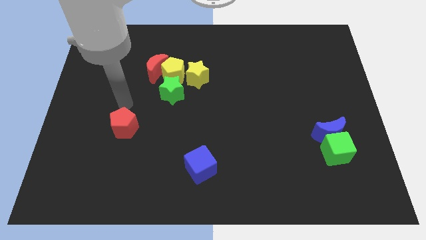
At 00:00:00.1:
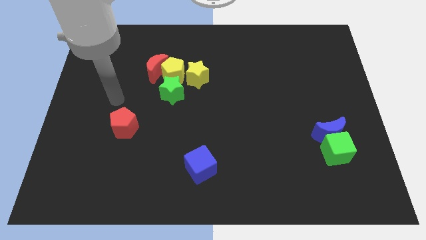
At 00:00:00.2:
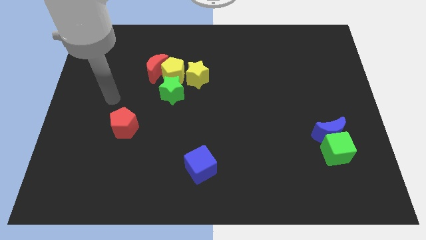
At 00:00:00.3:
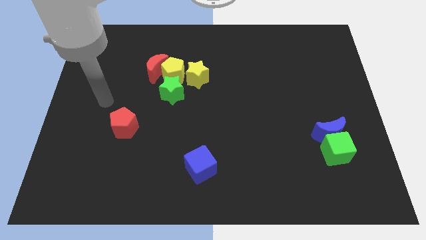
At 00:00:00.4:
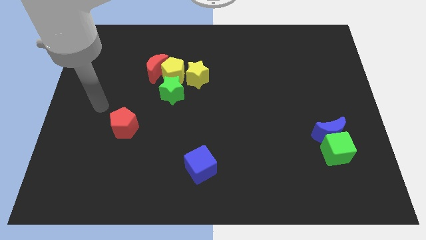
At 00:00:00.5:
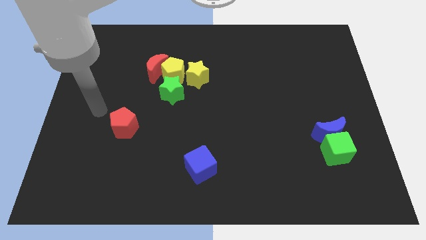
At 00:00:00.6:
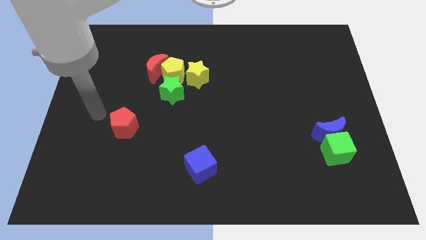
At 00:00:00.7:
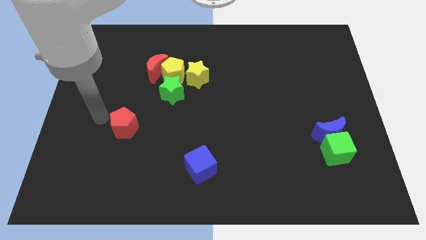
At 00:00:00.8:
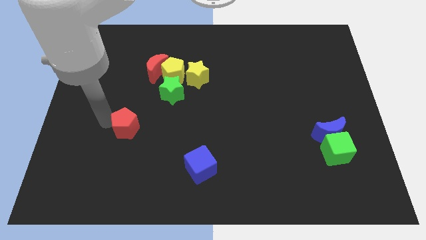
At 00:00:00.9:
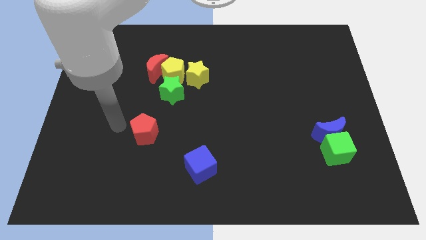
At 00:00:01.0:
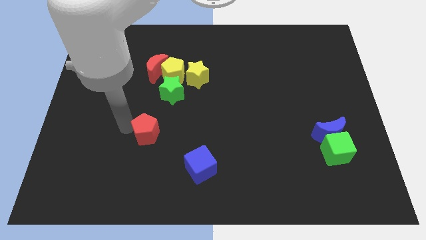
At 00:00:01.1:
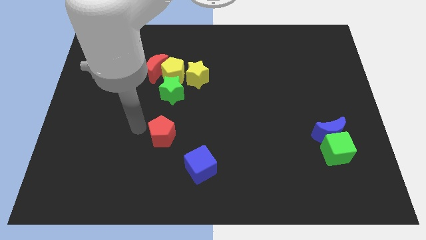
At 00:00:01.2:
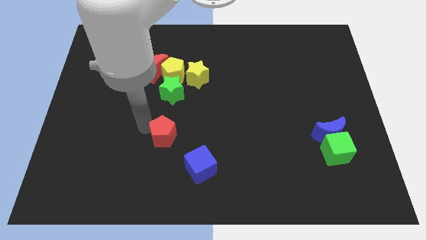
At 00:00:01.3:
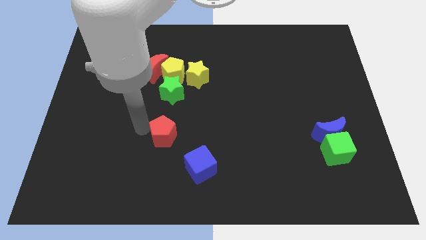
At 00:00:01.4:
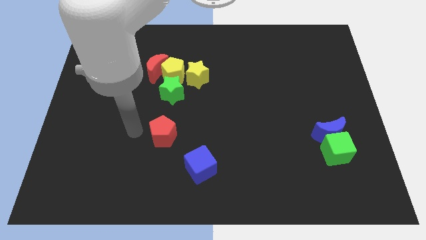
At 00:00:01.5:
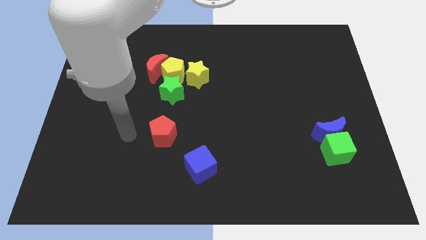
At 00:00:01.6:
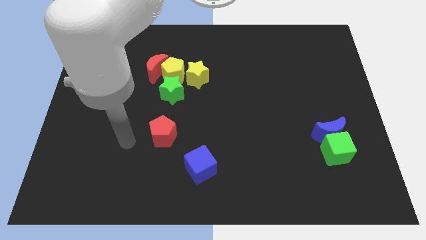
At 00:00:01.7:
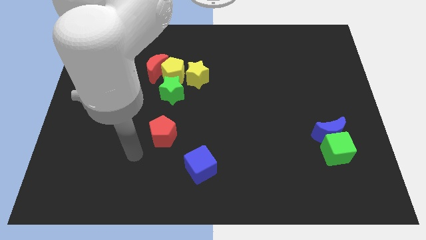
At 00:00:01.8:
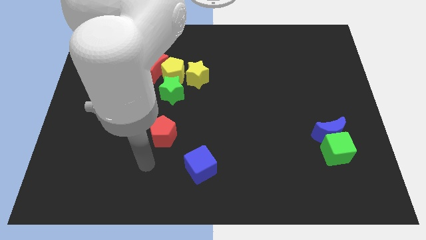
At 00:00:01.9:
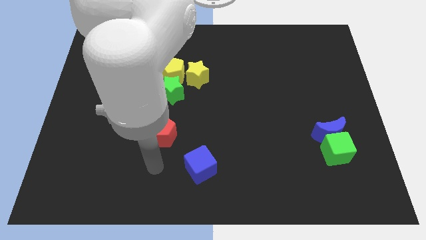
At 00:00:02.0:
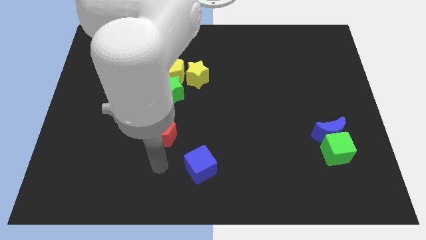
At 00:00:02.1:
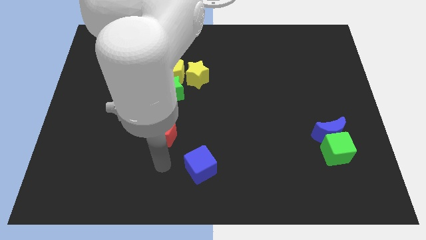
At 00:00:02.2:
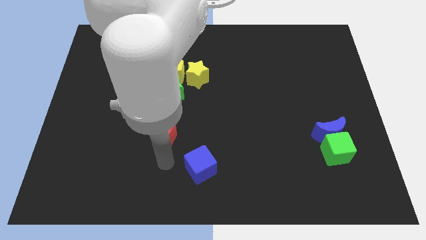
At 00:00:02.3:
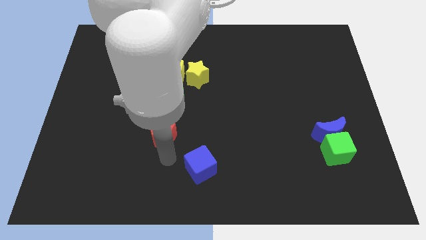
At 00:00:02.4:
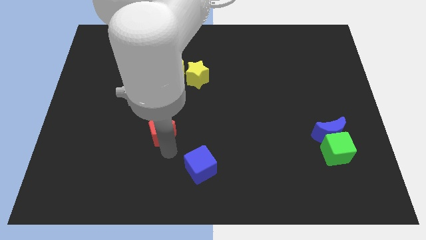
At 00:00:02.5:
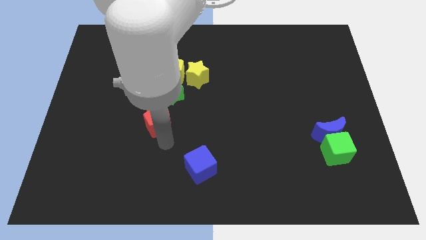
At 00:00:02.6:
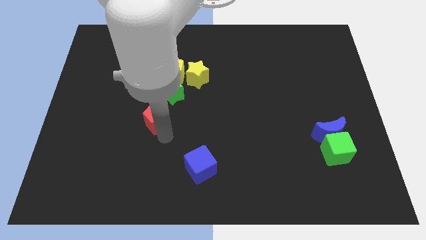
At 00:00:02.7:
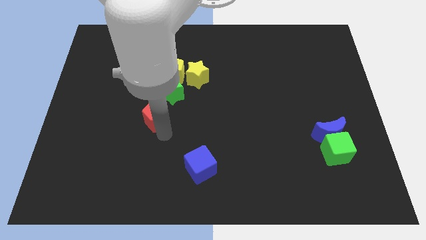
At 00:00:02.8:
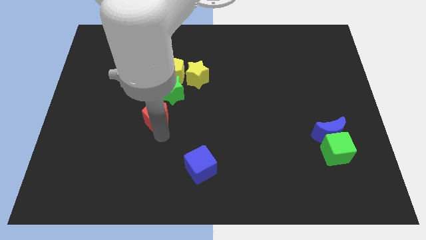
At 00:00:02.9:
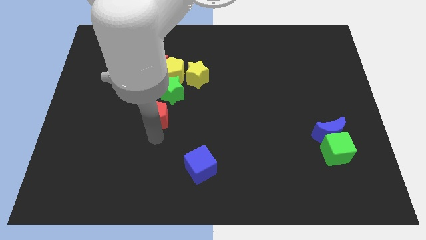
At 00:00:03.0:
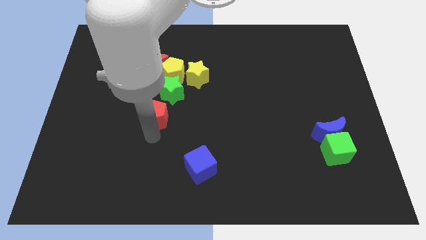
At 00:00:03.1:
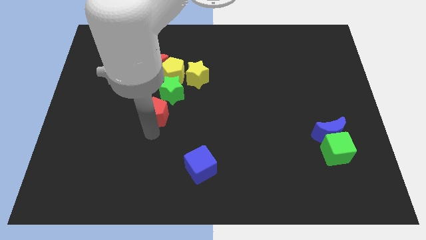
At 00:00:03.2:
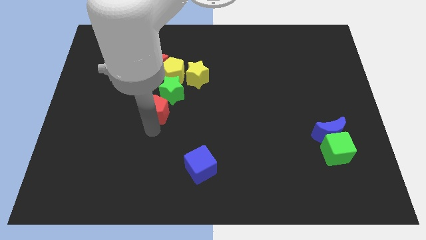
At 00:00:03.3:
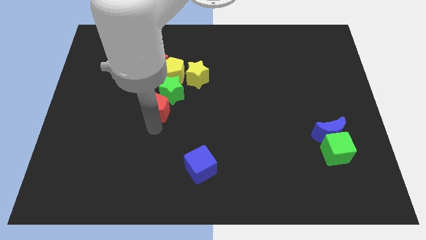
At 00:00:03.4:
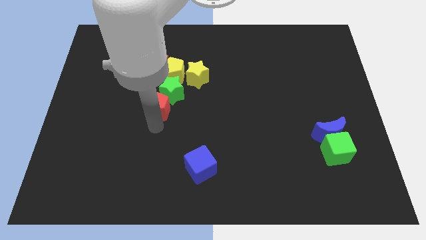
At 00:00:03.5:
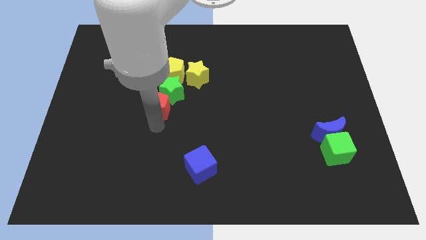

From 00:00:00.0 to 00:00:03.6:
push the red pentagon to the bottom left to the green star

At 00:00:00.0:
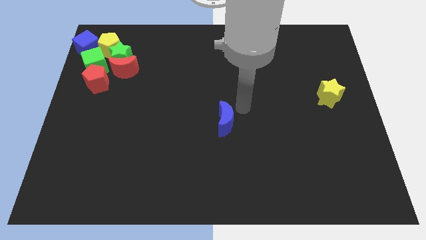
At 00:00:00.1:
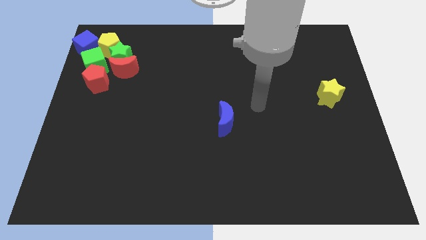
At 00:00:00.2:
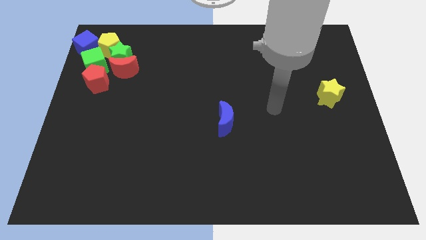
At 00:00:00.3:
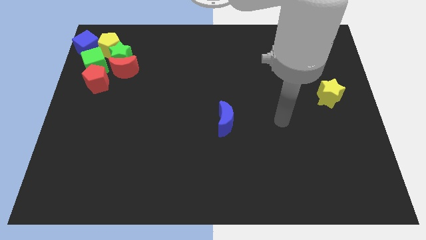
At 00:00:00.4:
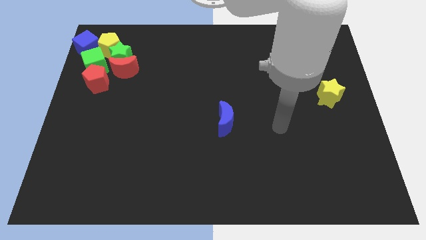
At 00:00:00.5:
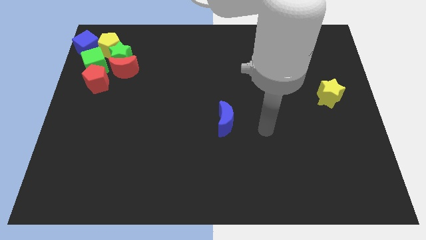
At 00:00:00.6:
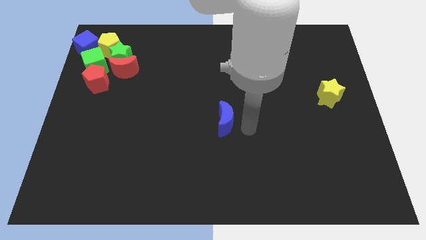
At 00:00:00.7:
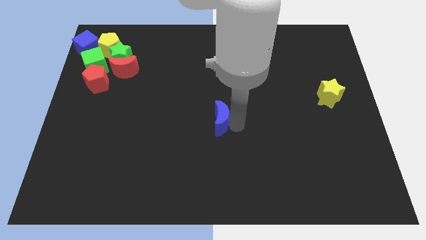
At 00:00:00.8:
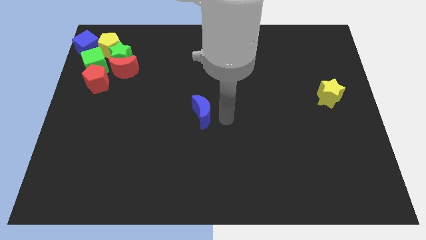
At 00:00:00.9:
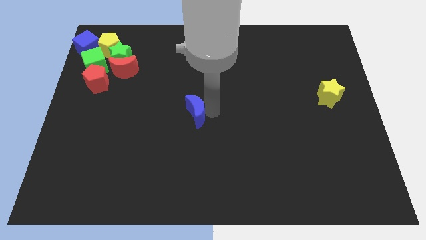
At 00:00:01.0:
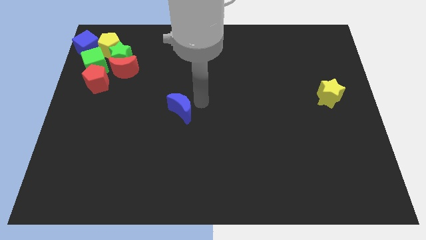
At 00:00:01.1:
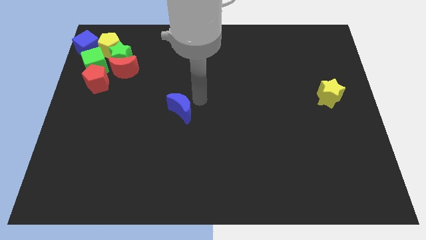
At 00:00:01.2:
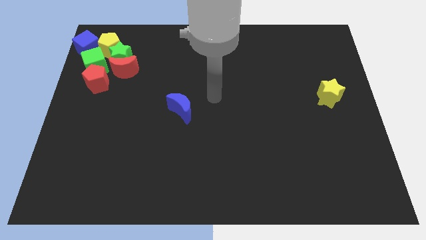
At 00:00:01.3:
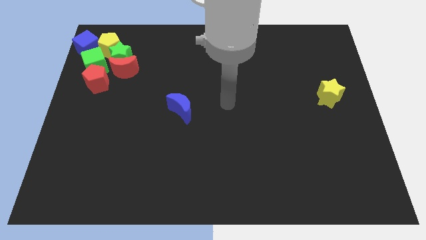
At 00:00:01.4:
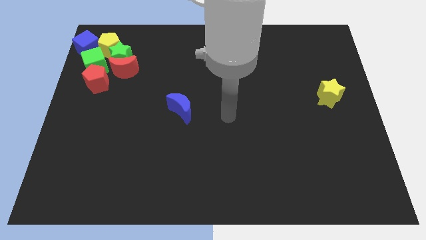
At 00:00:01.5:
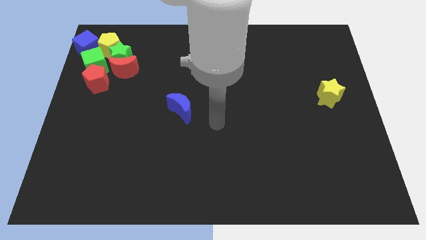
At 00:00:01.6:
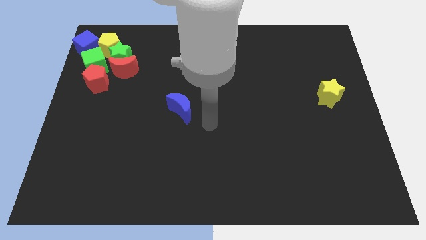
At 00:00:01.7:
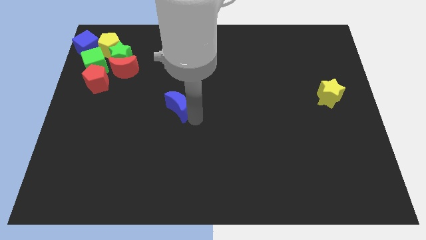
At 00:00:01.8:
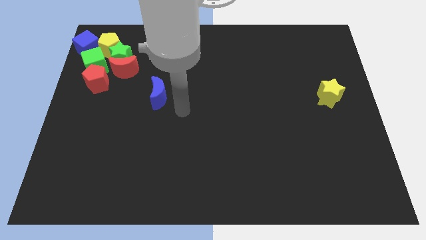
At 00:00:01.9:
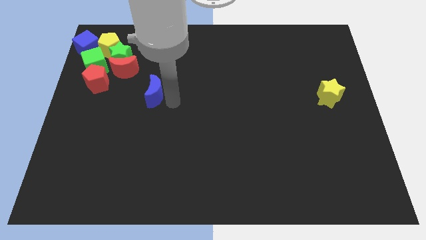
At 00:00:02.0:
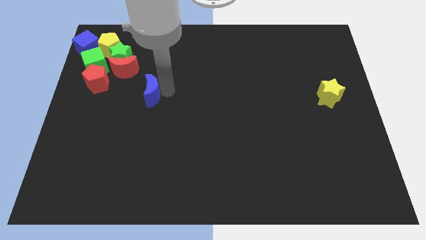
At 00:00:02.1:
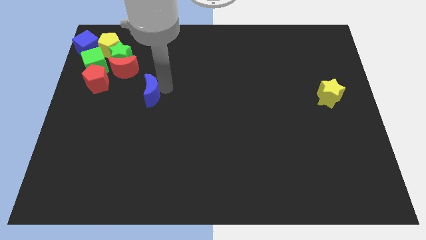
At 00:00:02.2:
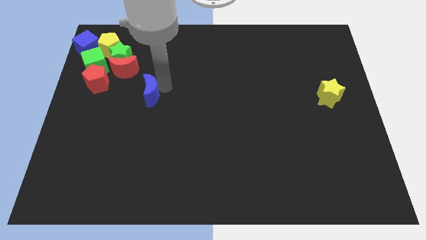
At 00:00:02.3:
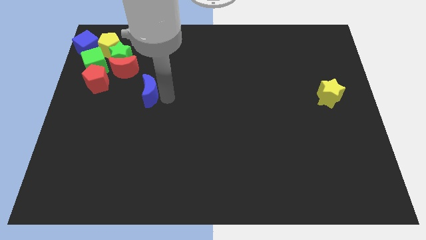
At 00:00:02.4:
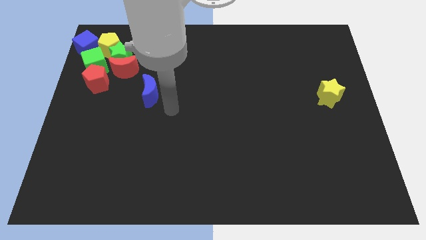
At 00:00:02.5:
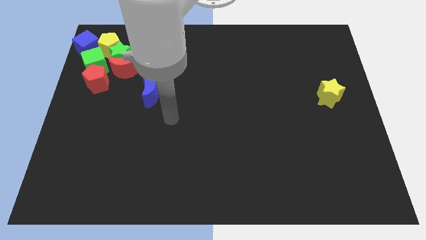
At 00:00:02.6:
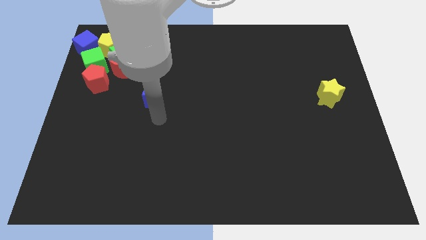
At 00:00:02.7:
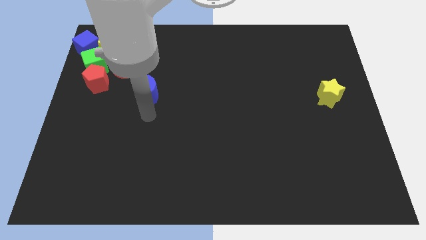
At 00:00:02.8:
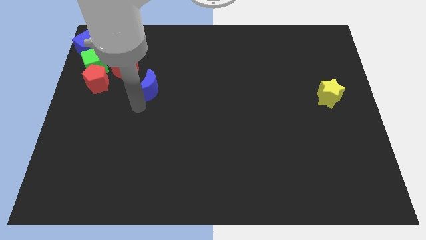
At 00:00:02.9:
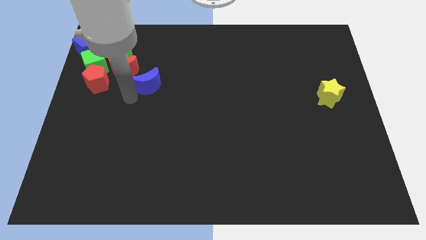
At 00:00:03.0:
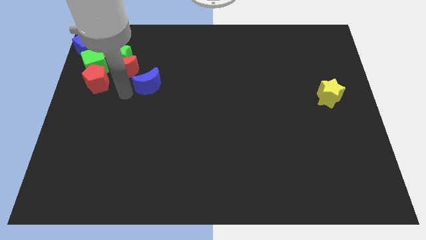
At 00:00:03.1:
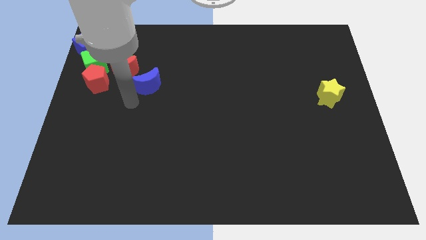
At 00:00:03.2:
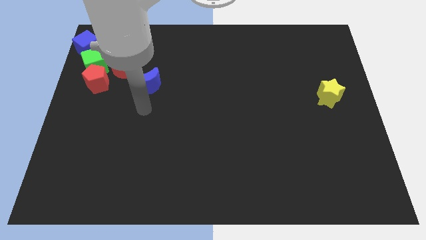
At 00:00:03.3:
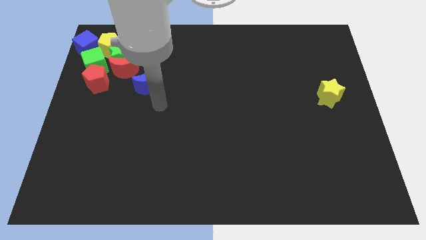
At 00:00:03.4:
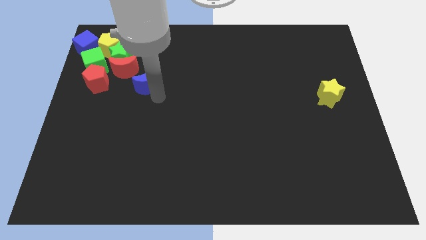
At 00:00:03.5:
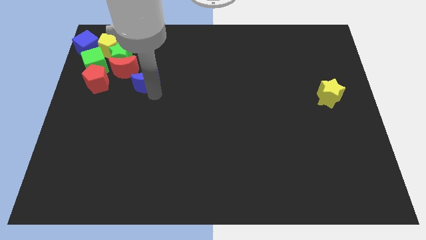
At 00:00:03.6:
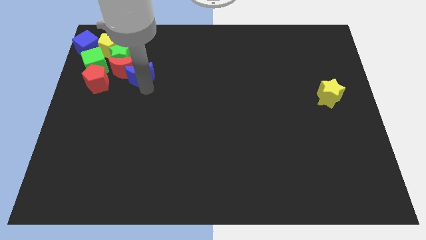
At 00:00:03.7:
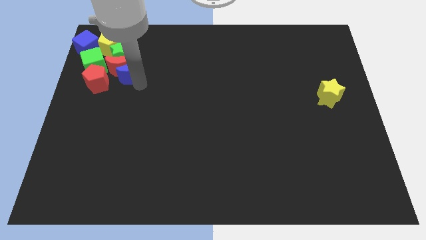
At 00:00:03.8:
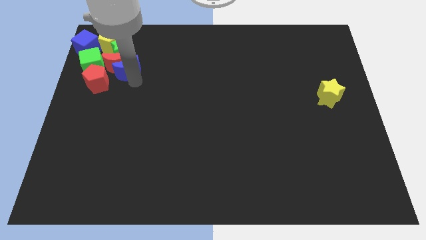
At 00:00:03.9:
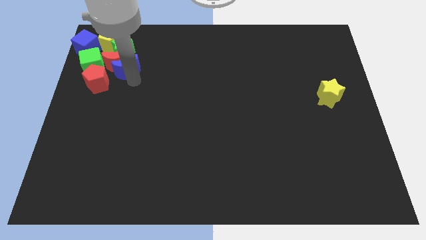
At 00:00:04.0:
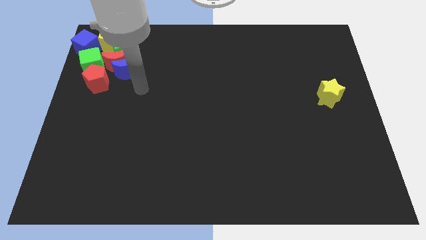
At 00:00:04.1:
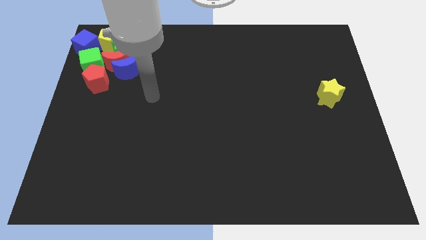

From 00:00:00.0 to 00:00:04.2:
move the blue crescent into the group of blocks

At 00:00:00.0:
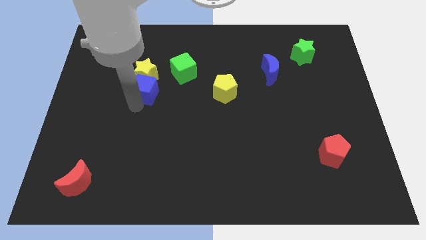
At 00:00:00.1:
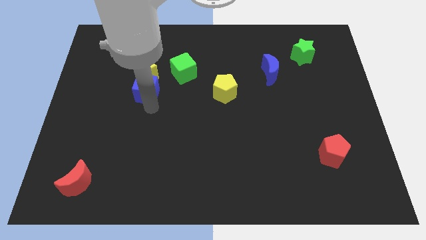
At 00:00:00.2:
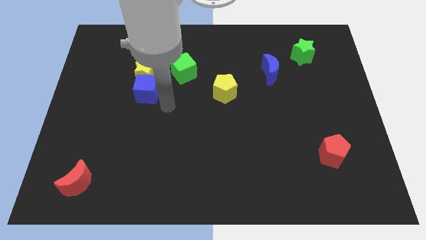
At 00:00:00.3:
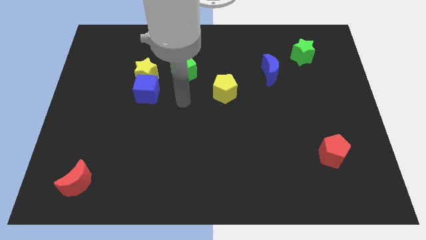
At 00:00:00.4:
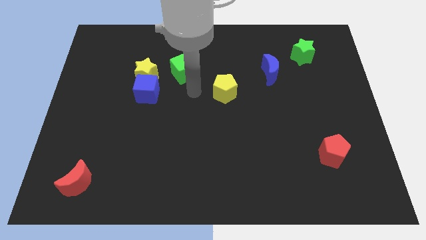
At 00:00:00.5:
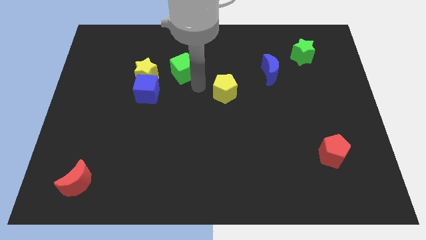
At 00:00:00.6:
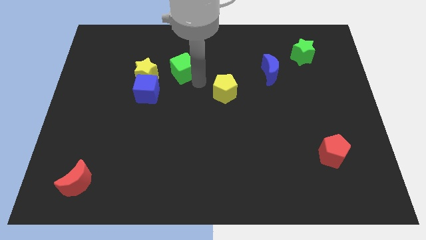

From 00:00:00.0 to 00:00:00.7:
place the arm down to the green cube

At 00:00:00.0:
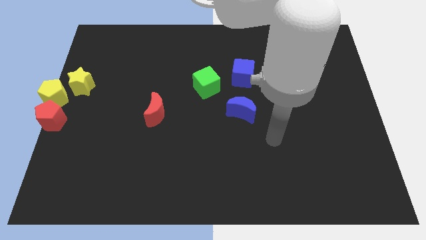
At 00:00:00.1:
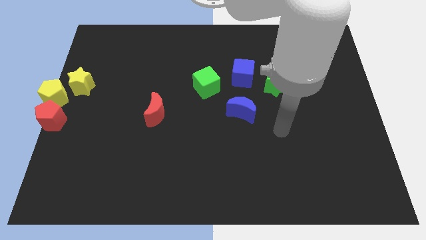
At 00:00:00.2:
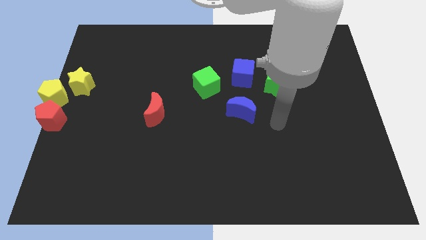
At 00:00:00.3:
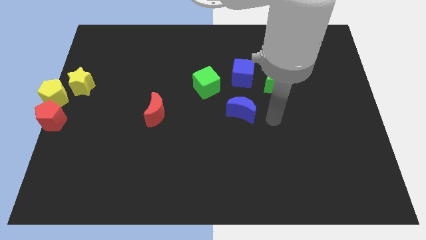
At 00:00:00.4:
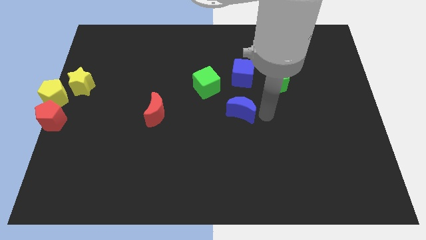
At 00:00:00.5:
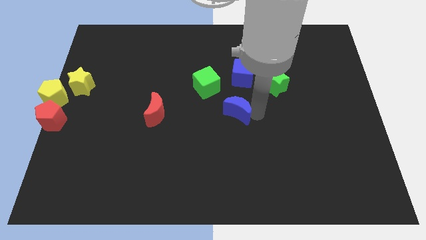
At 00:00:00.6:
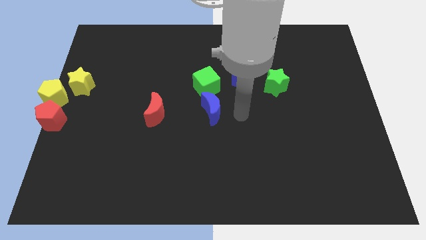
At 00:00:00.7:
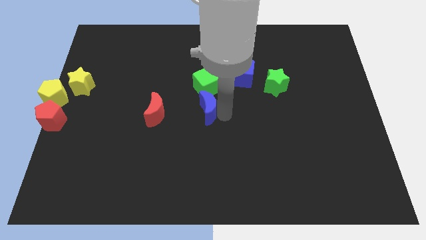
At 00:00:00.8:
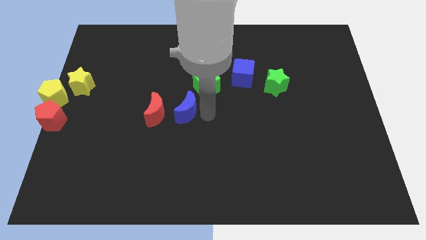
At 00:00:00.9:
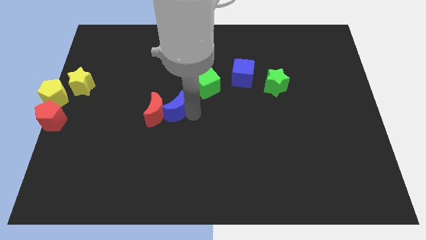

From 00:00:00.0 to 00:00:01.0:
push the blue moon towards the red moon
